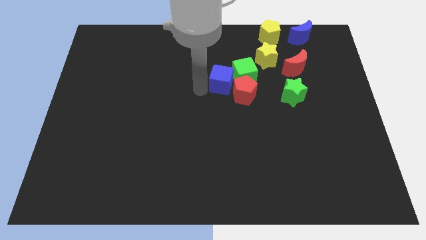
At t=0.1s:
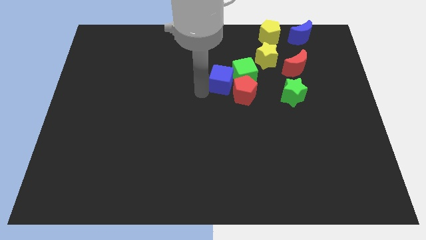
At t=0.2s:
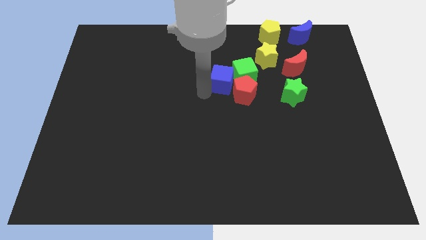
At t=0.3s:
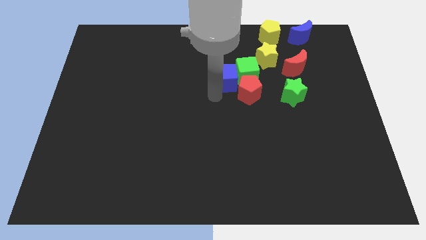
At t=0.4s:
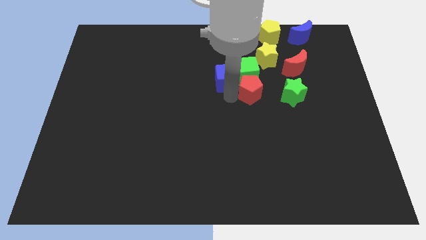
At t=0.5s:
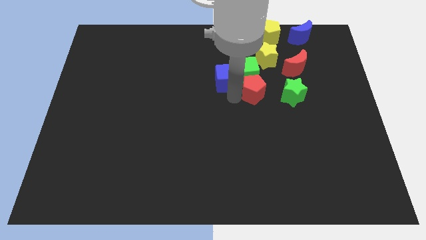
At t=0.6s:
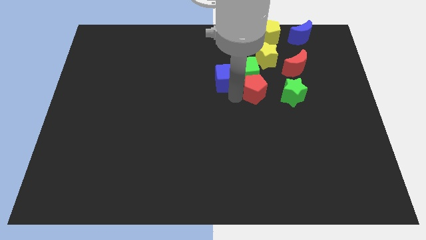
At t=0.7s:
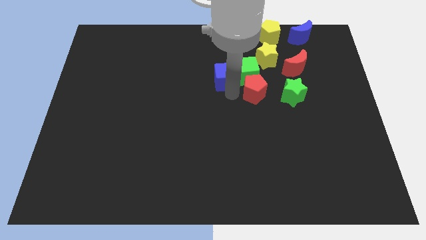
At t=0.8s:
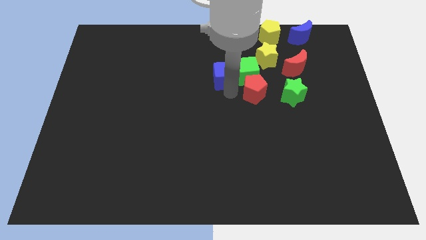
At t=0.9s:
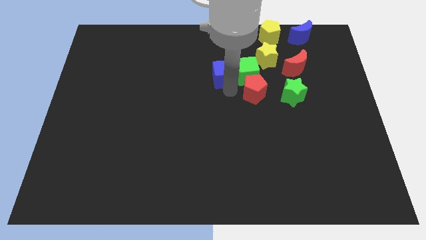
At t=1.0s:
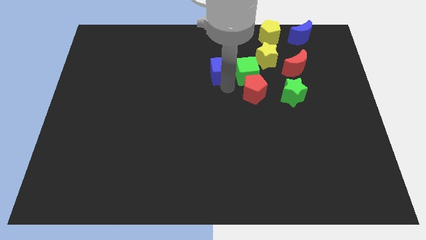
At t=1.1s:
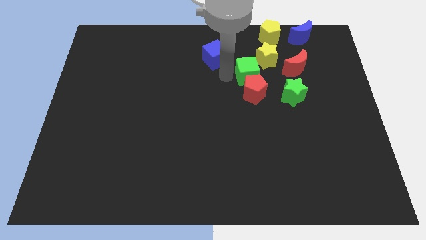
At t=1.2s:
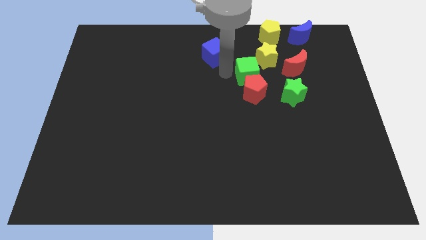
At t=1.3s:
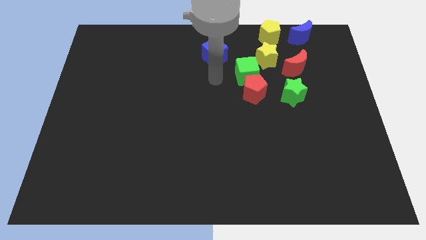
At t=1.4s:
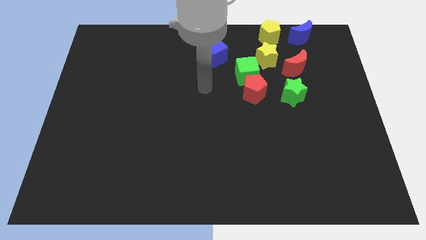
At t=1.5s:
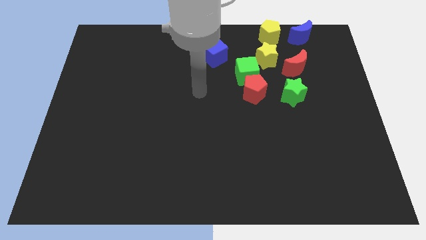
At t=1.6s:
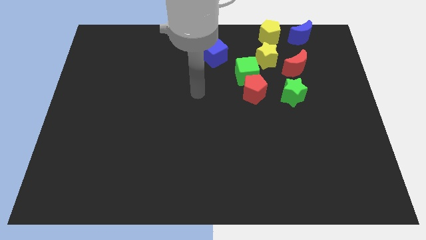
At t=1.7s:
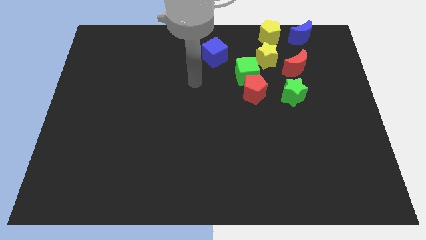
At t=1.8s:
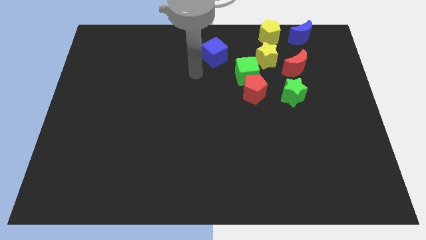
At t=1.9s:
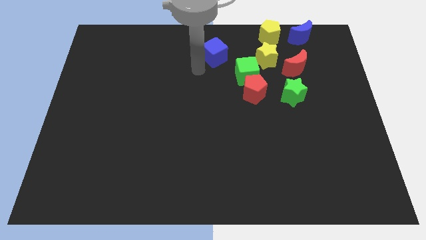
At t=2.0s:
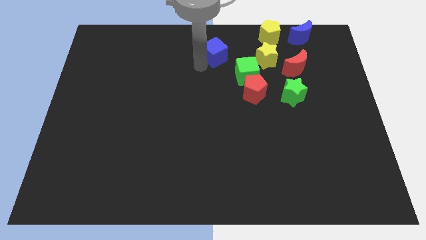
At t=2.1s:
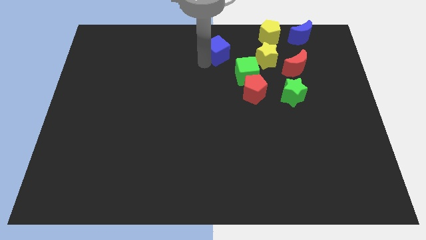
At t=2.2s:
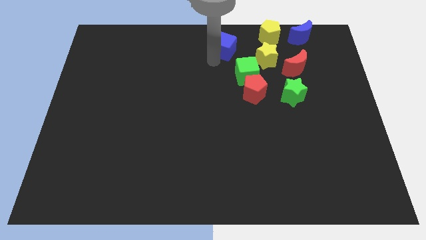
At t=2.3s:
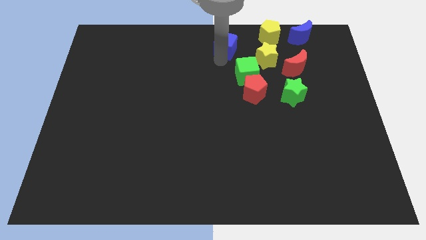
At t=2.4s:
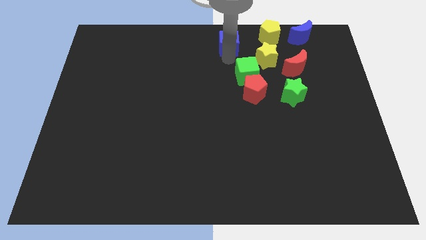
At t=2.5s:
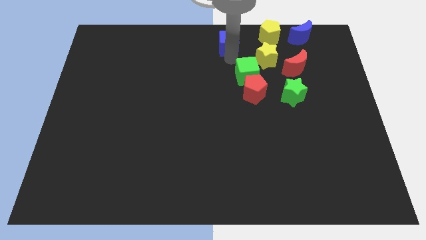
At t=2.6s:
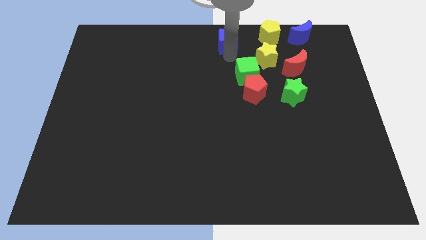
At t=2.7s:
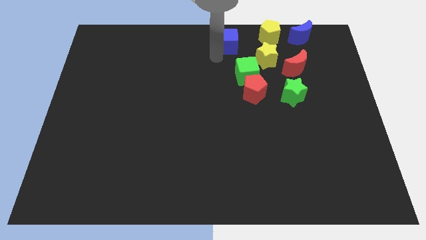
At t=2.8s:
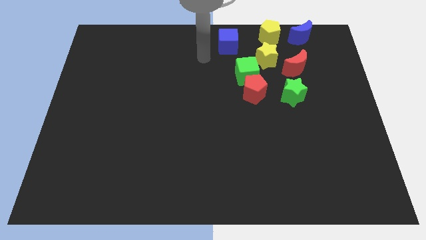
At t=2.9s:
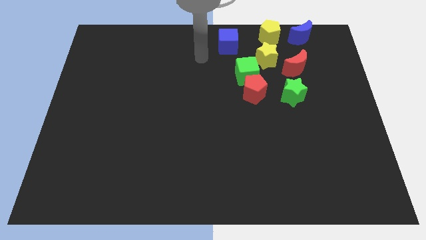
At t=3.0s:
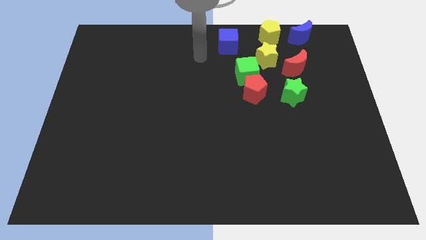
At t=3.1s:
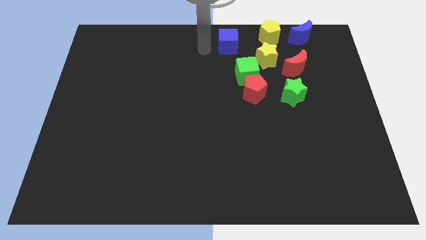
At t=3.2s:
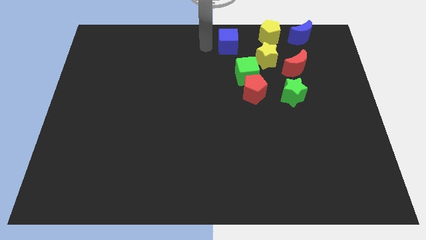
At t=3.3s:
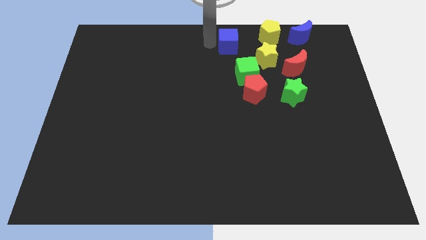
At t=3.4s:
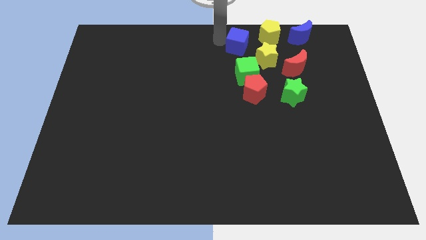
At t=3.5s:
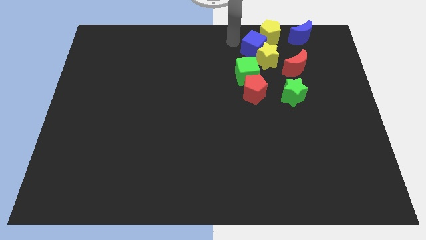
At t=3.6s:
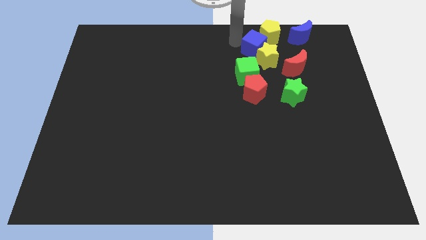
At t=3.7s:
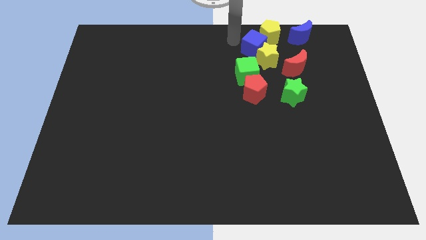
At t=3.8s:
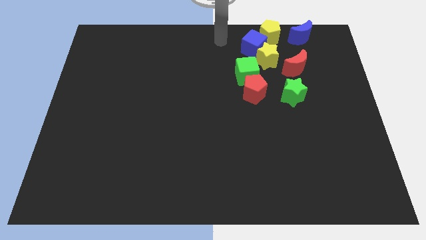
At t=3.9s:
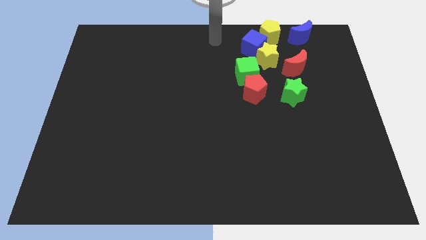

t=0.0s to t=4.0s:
move the blue cube into the yellow star

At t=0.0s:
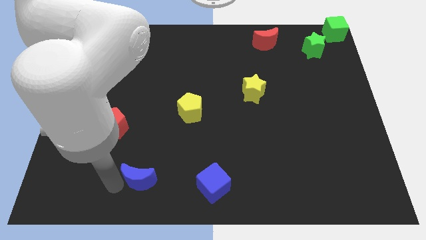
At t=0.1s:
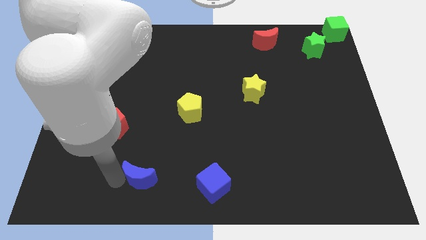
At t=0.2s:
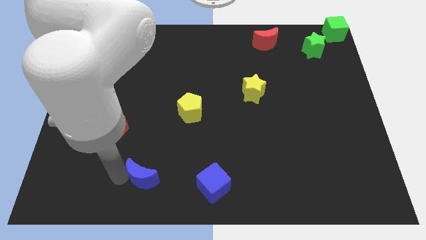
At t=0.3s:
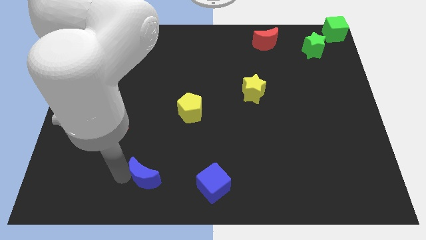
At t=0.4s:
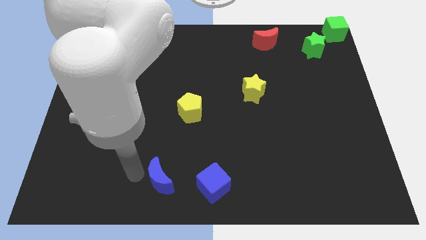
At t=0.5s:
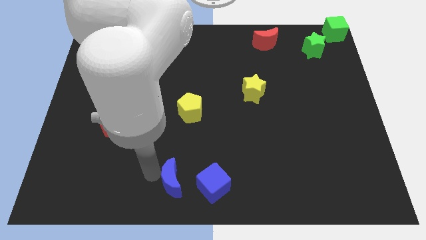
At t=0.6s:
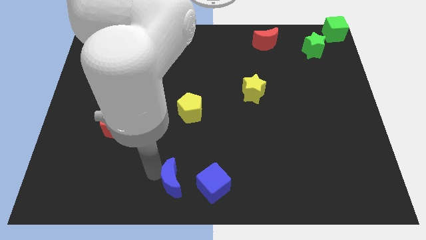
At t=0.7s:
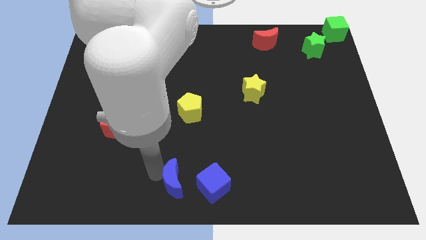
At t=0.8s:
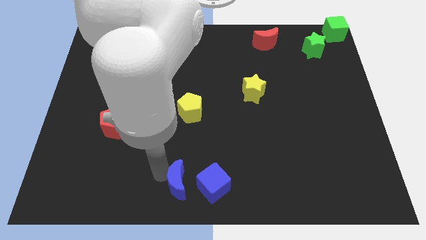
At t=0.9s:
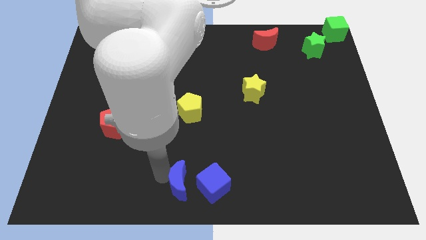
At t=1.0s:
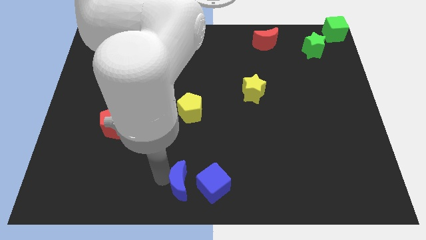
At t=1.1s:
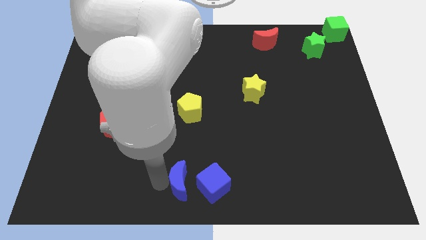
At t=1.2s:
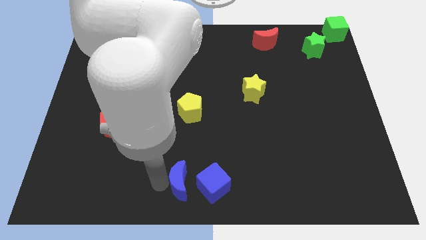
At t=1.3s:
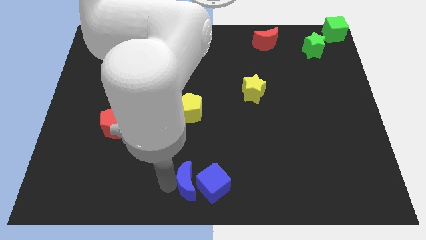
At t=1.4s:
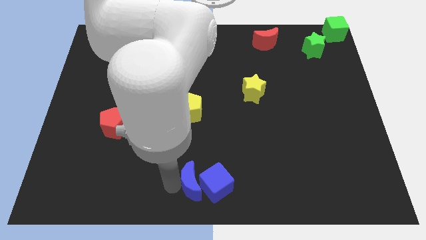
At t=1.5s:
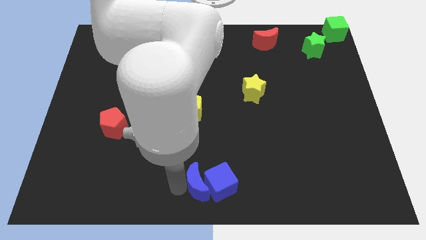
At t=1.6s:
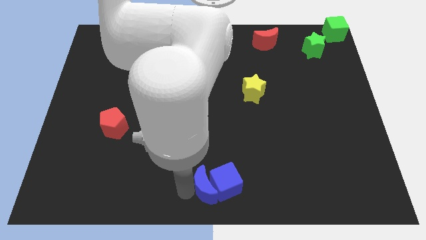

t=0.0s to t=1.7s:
push the blue crescent left to the blue cube

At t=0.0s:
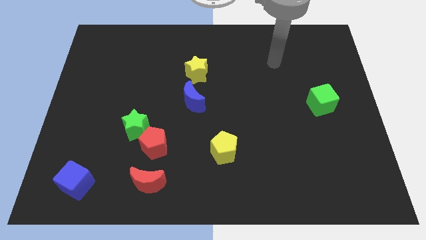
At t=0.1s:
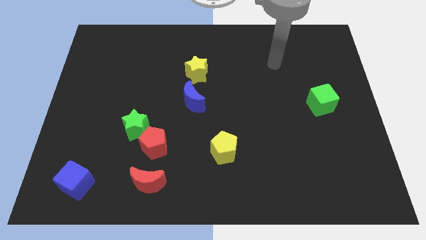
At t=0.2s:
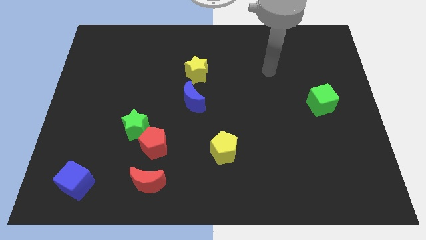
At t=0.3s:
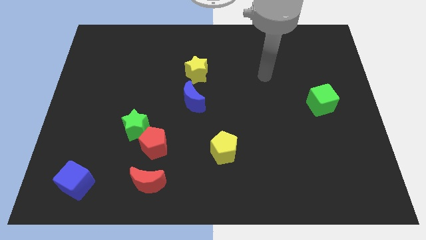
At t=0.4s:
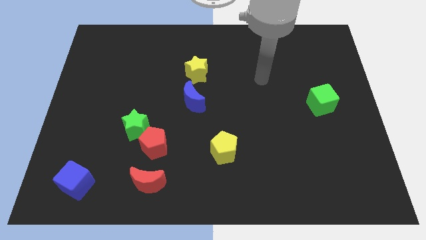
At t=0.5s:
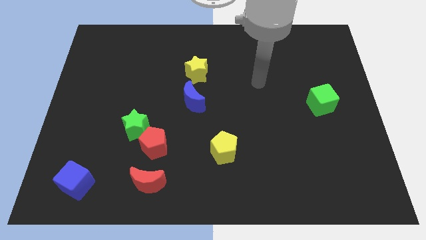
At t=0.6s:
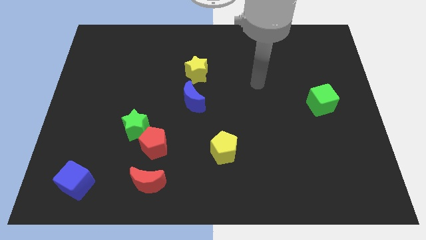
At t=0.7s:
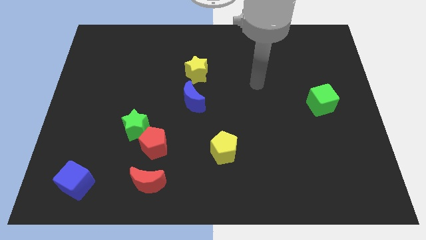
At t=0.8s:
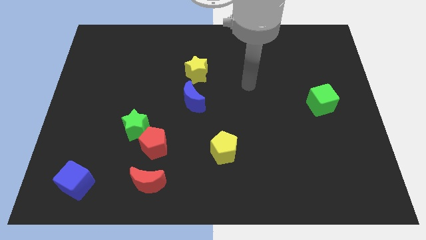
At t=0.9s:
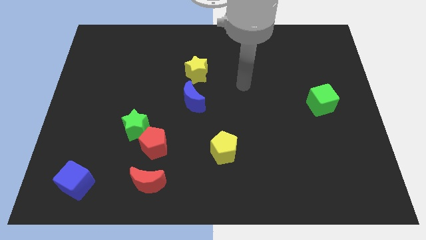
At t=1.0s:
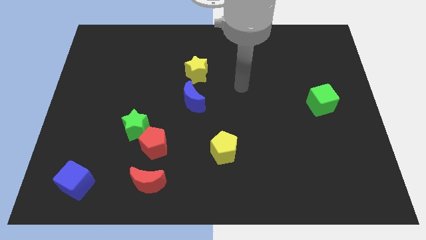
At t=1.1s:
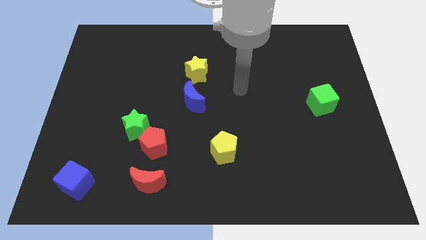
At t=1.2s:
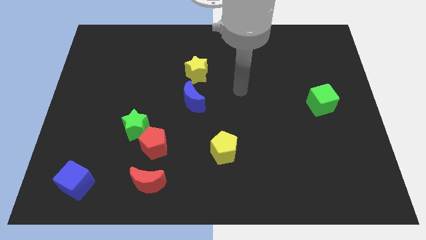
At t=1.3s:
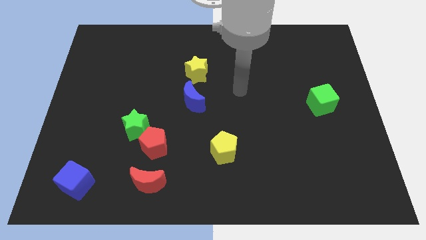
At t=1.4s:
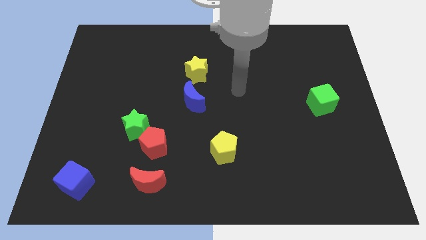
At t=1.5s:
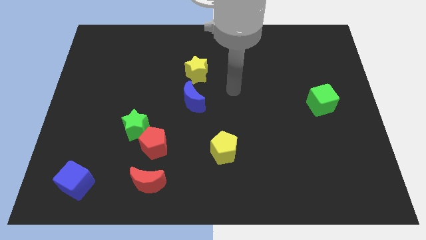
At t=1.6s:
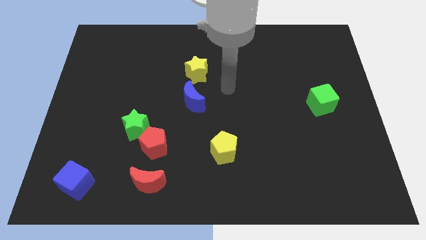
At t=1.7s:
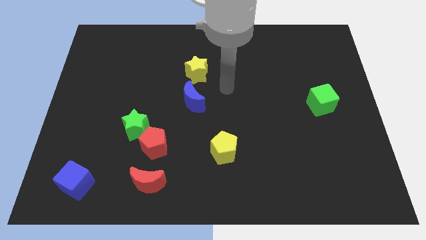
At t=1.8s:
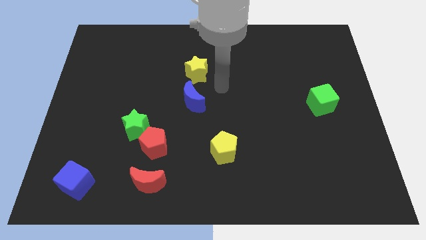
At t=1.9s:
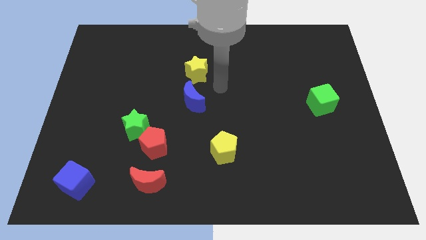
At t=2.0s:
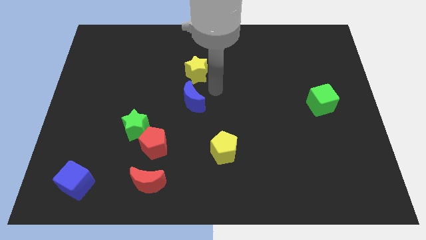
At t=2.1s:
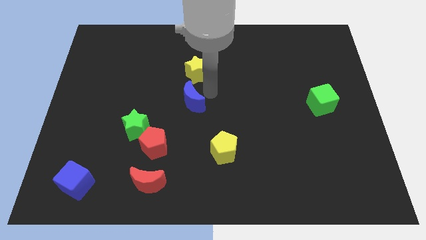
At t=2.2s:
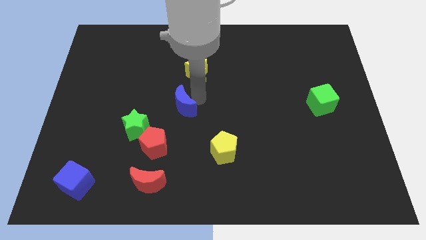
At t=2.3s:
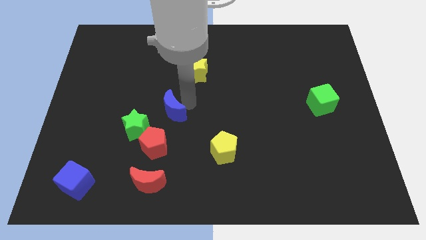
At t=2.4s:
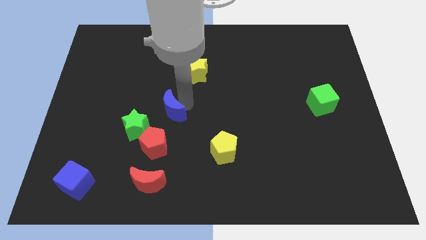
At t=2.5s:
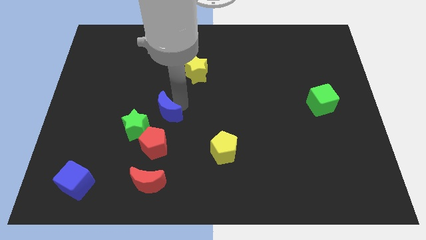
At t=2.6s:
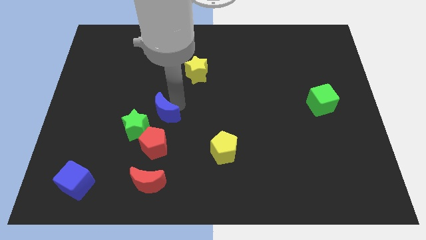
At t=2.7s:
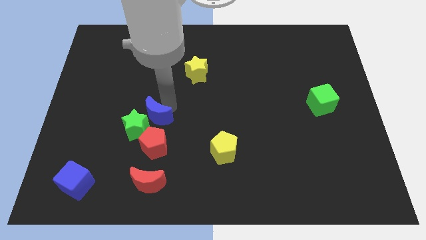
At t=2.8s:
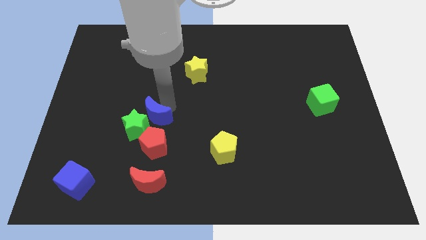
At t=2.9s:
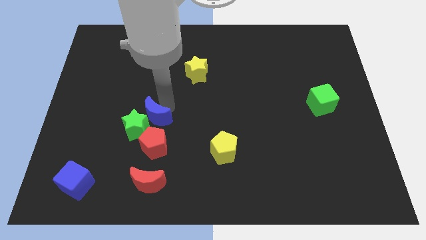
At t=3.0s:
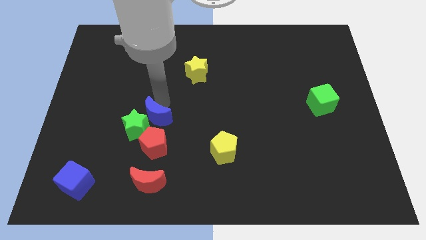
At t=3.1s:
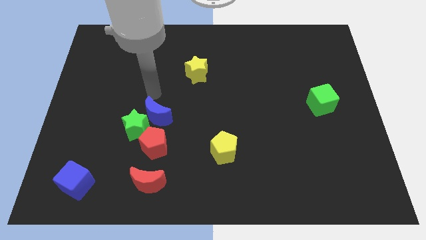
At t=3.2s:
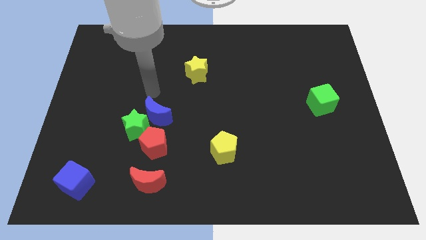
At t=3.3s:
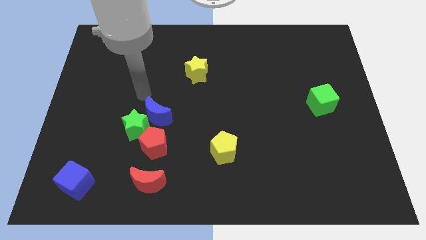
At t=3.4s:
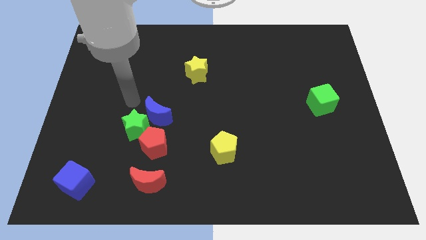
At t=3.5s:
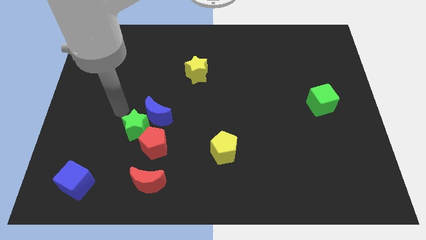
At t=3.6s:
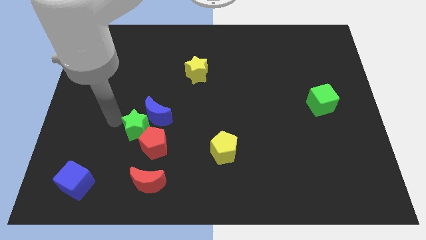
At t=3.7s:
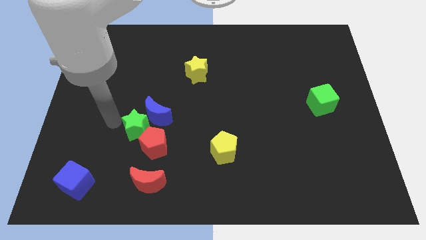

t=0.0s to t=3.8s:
move the blue crescent to the right of the green star
